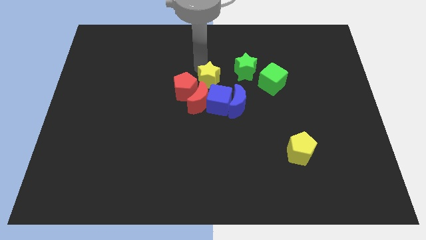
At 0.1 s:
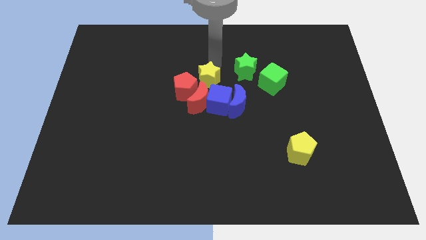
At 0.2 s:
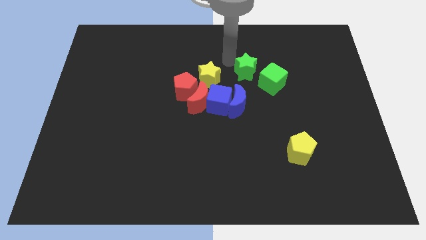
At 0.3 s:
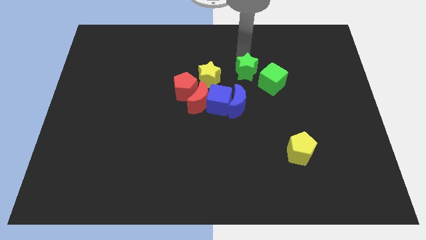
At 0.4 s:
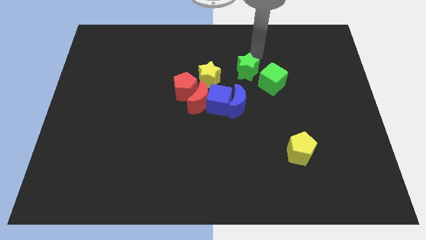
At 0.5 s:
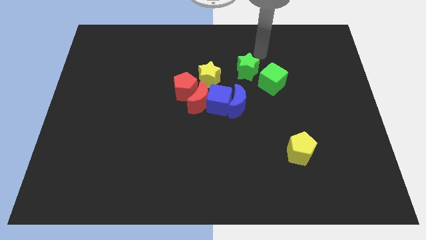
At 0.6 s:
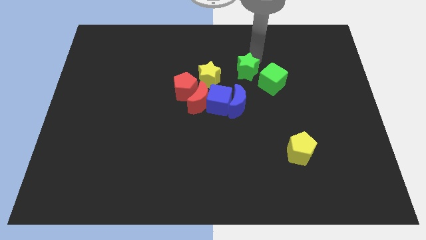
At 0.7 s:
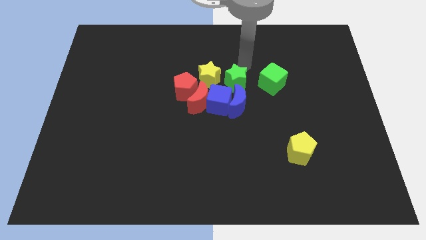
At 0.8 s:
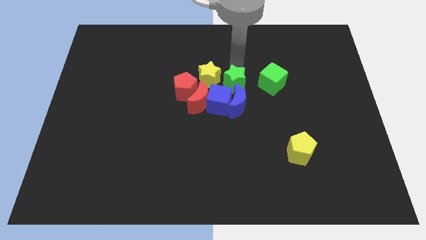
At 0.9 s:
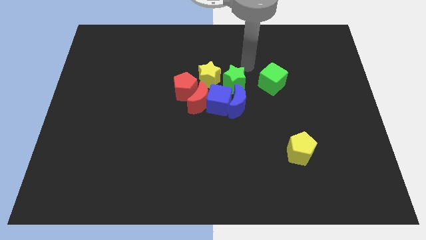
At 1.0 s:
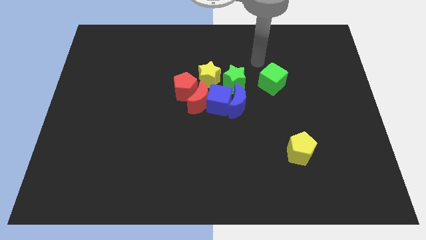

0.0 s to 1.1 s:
push the green star to the right of the yellow star

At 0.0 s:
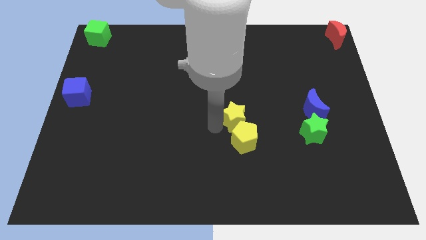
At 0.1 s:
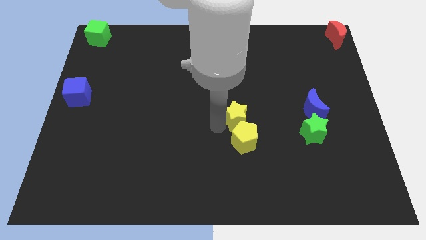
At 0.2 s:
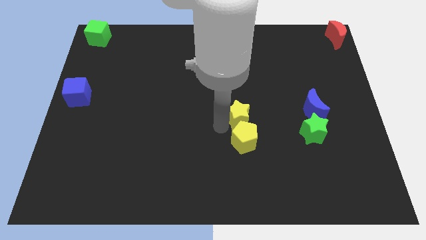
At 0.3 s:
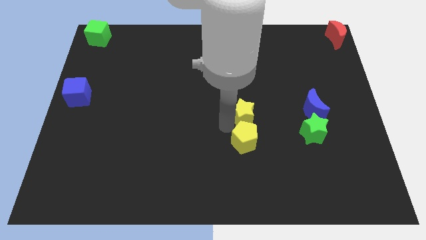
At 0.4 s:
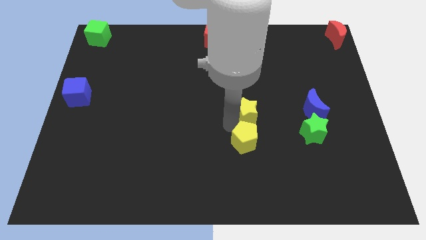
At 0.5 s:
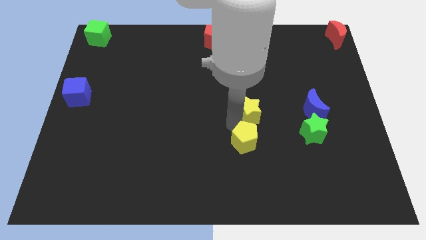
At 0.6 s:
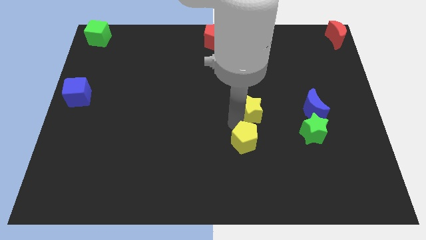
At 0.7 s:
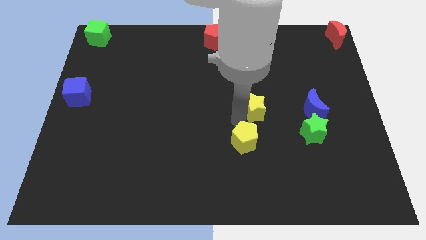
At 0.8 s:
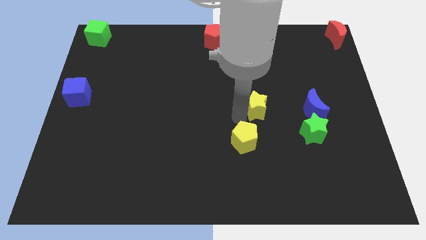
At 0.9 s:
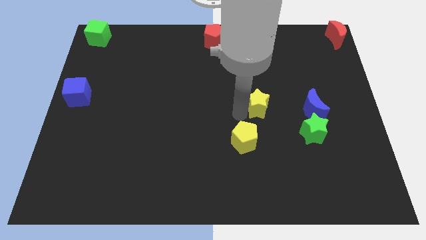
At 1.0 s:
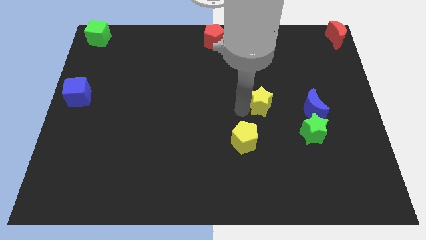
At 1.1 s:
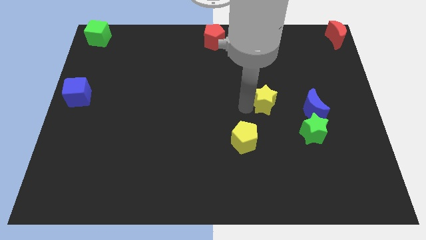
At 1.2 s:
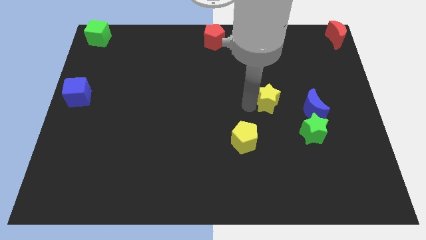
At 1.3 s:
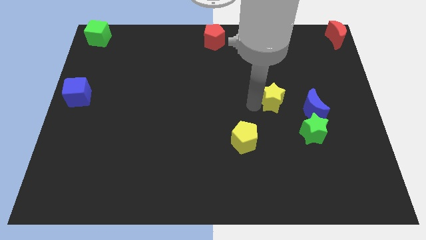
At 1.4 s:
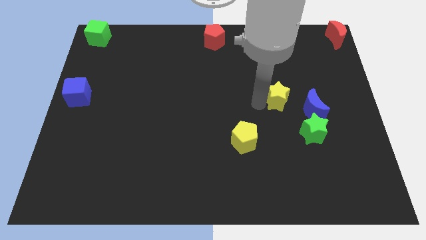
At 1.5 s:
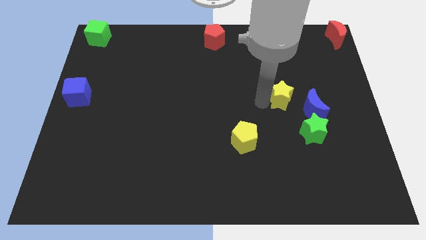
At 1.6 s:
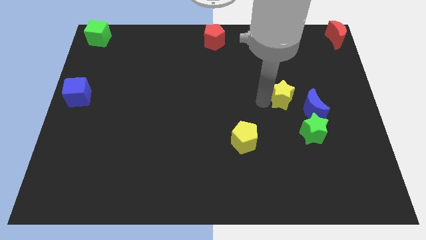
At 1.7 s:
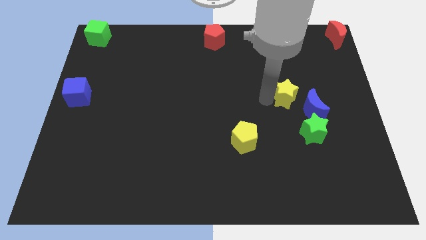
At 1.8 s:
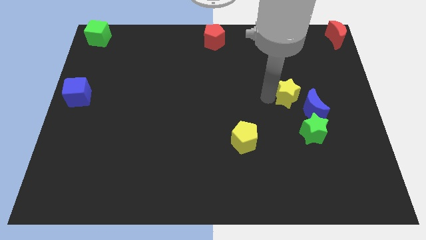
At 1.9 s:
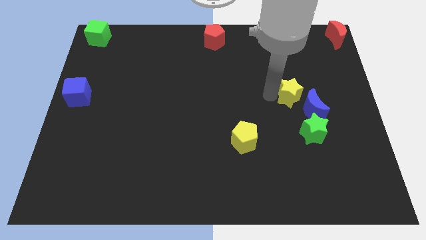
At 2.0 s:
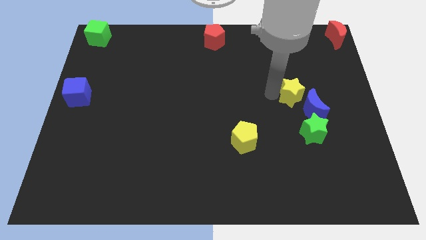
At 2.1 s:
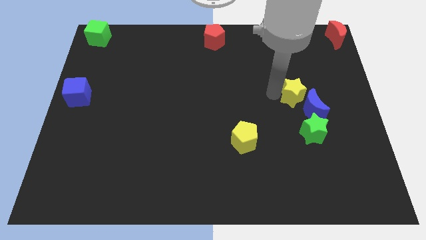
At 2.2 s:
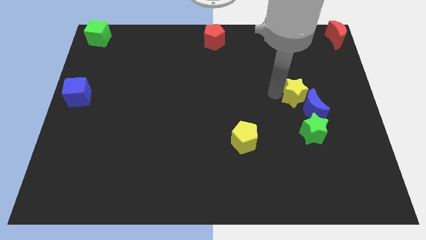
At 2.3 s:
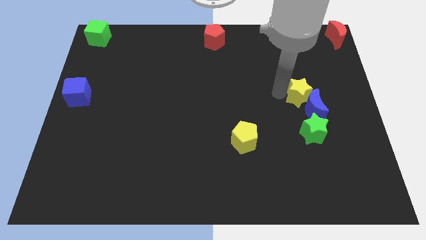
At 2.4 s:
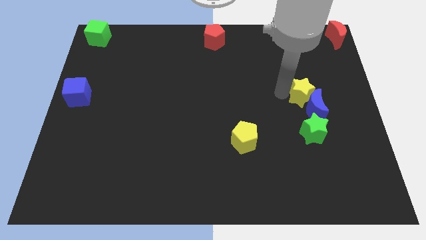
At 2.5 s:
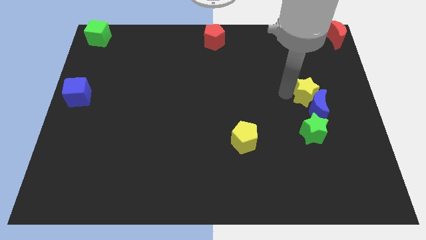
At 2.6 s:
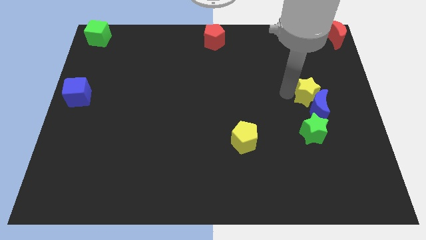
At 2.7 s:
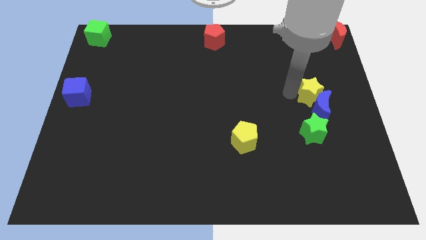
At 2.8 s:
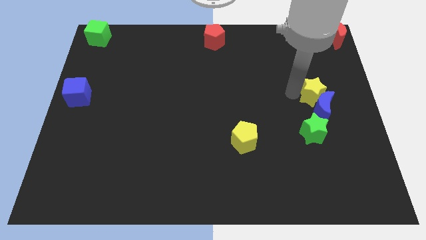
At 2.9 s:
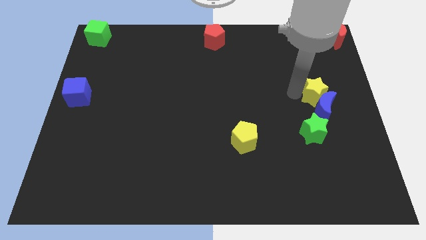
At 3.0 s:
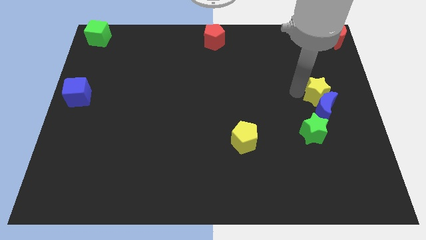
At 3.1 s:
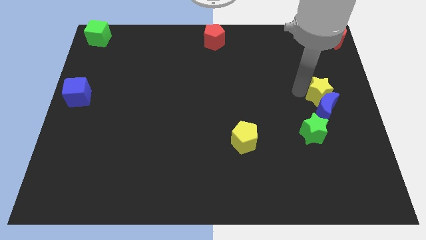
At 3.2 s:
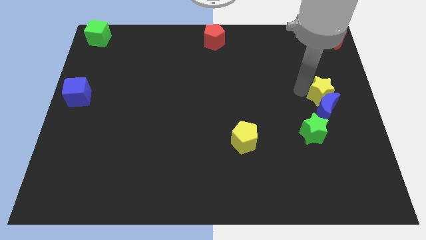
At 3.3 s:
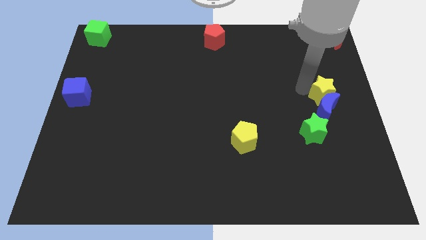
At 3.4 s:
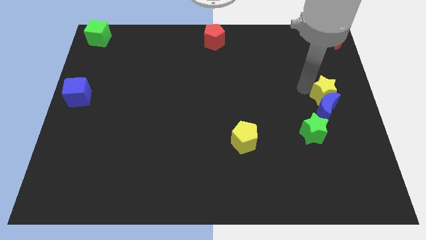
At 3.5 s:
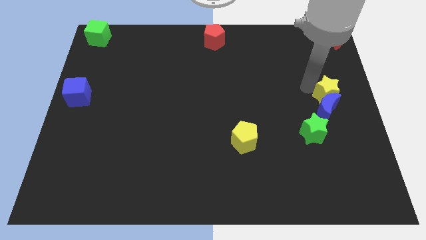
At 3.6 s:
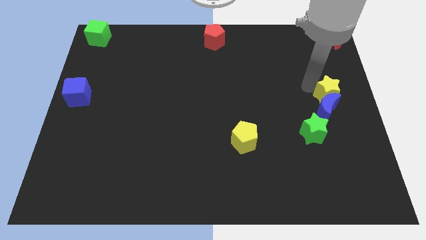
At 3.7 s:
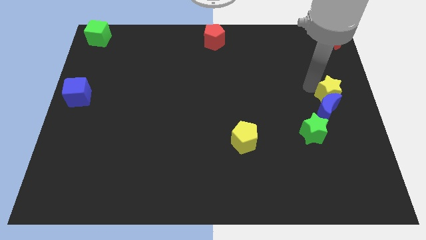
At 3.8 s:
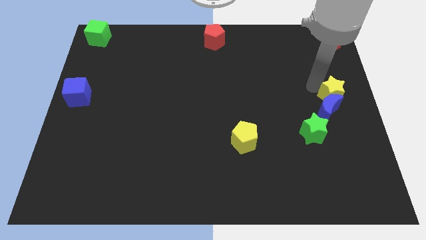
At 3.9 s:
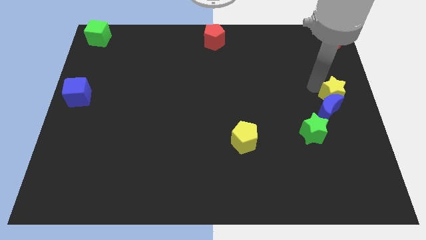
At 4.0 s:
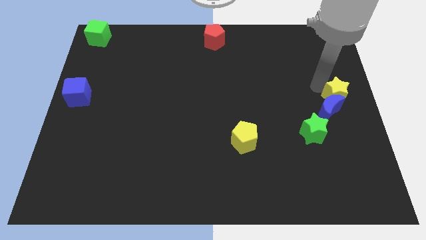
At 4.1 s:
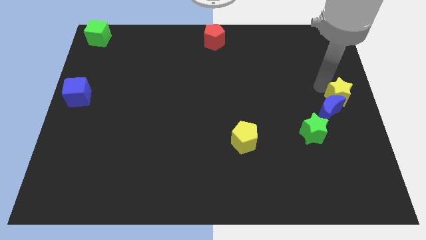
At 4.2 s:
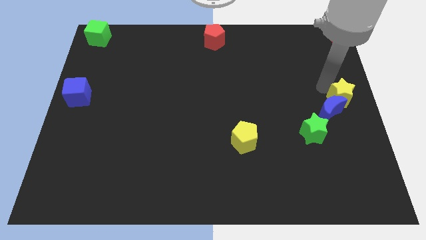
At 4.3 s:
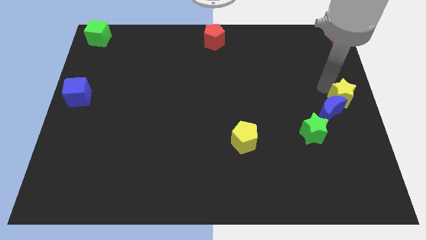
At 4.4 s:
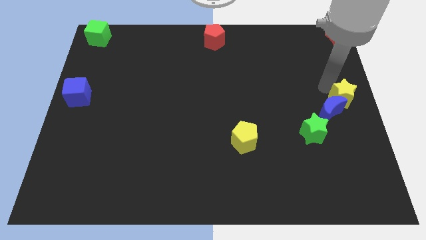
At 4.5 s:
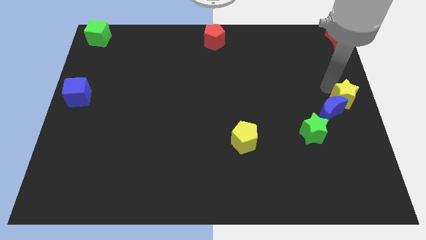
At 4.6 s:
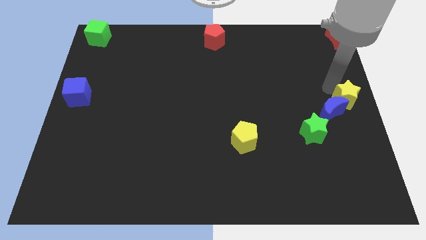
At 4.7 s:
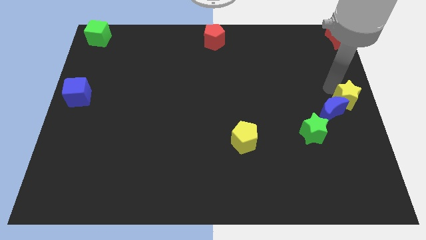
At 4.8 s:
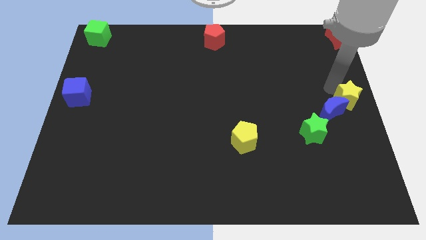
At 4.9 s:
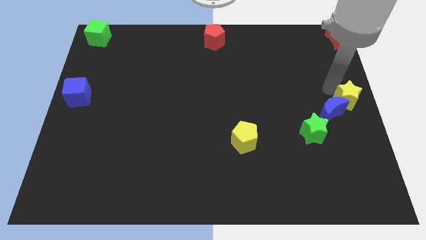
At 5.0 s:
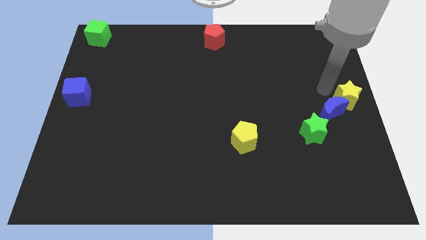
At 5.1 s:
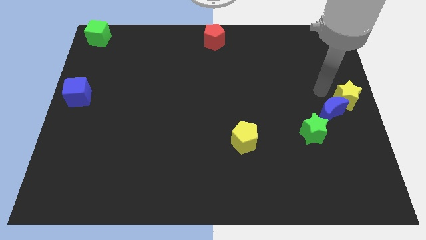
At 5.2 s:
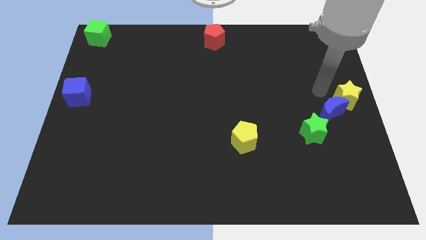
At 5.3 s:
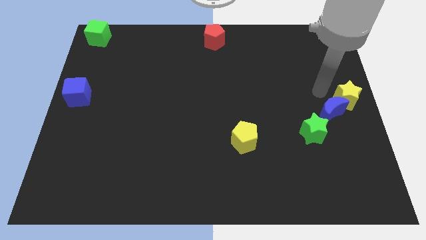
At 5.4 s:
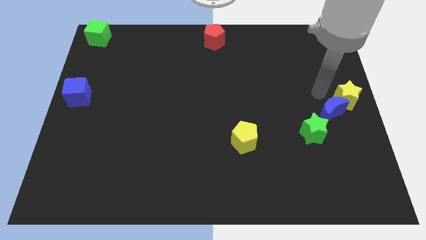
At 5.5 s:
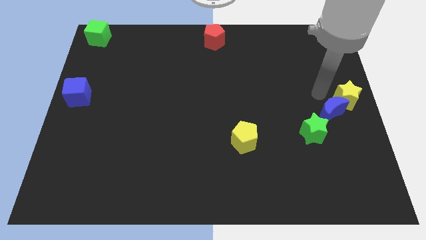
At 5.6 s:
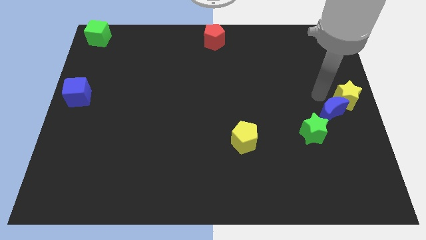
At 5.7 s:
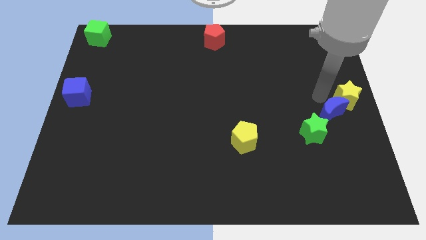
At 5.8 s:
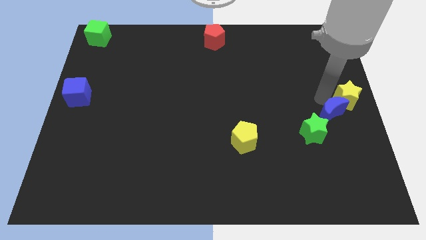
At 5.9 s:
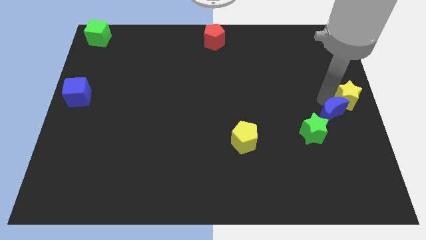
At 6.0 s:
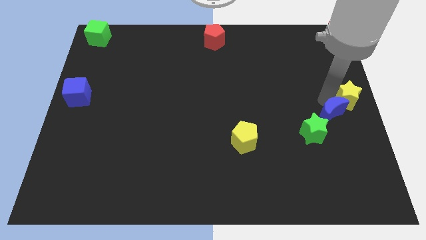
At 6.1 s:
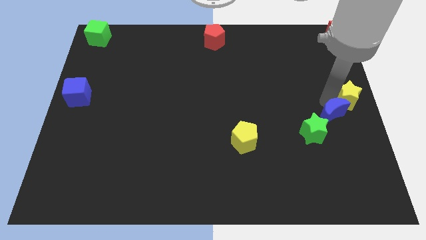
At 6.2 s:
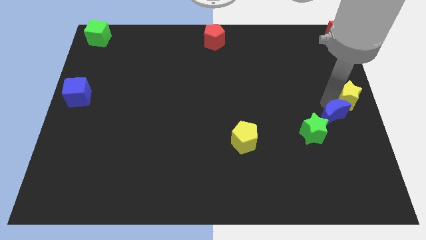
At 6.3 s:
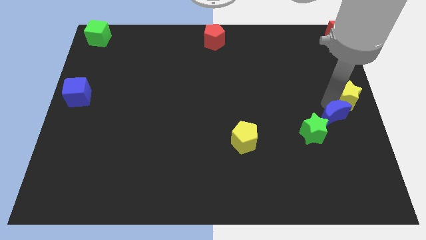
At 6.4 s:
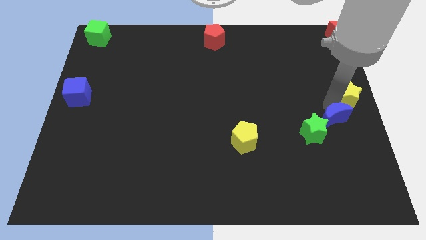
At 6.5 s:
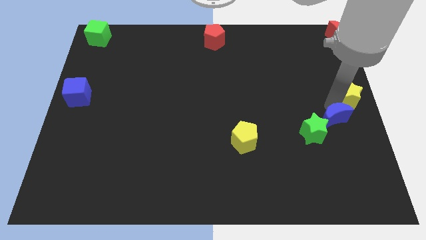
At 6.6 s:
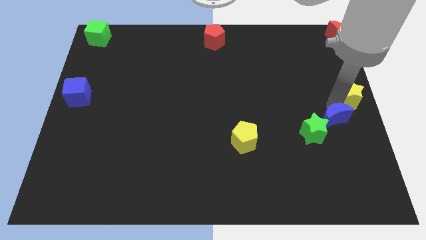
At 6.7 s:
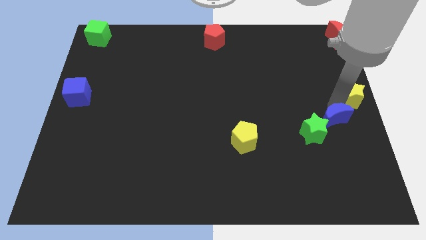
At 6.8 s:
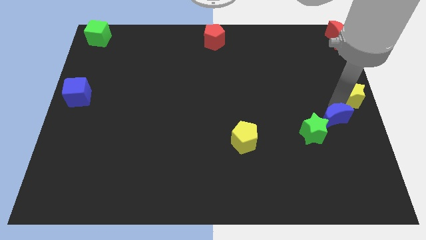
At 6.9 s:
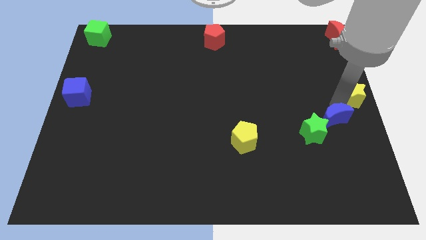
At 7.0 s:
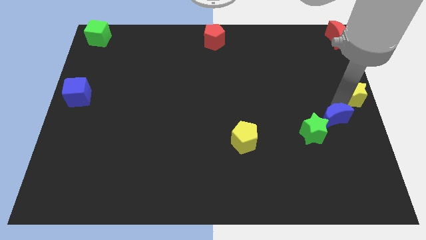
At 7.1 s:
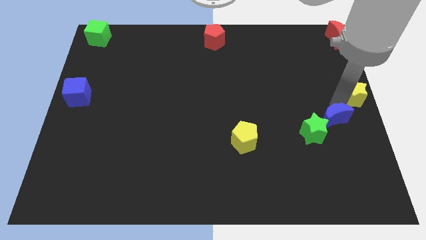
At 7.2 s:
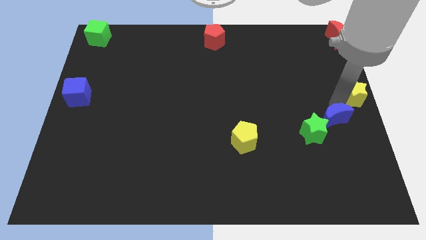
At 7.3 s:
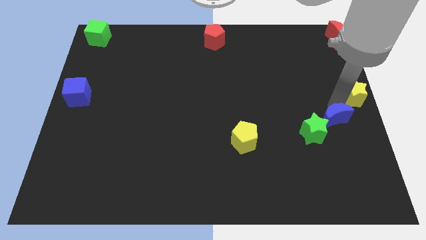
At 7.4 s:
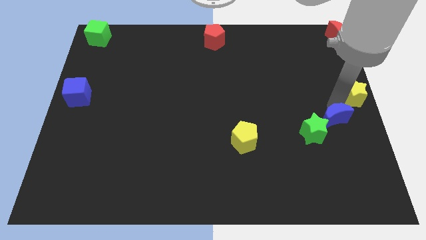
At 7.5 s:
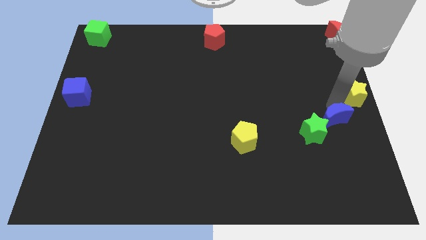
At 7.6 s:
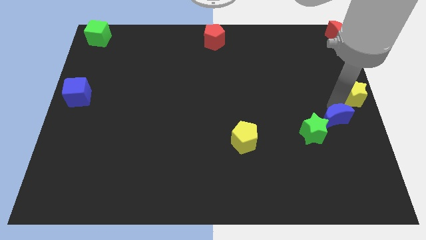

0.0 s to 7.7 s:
place the yellow star to the right center of the board
